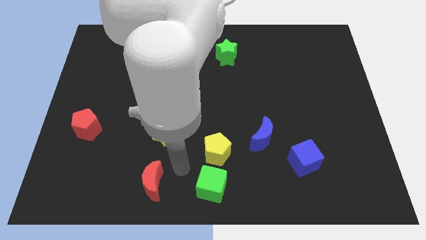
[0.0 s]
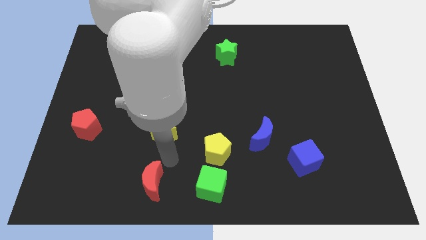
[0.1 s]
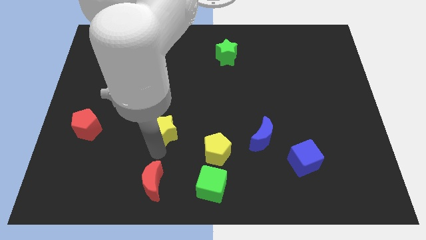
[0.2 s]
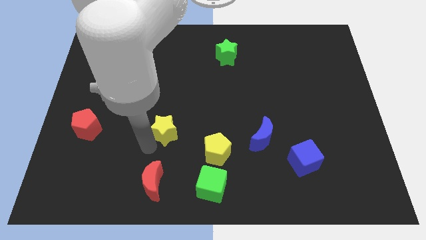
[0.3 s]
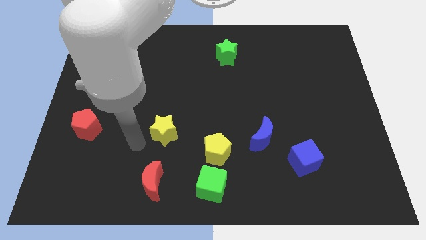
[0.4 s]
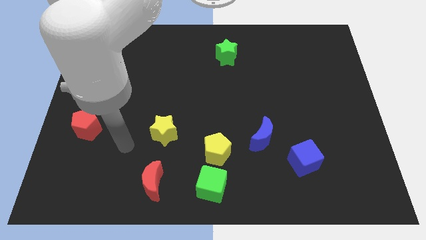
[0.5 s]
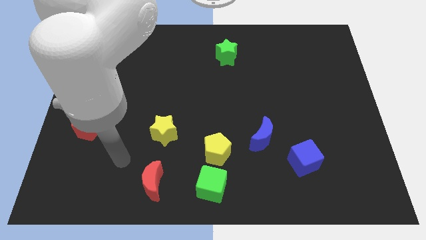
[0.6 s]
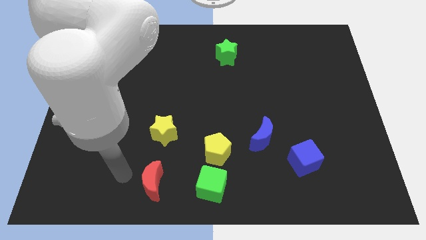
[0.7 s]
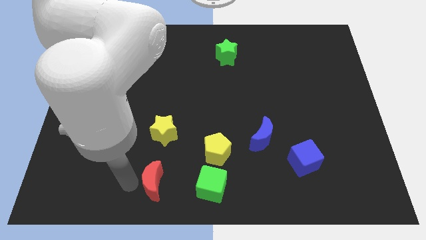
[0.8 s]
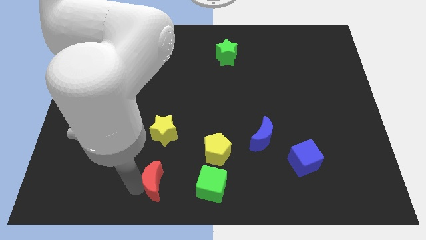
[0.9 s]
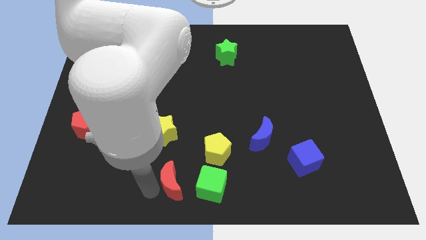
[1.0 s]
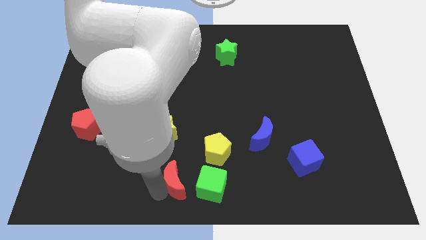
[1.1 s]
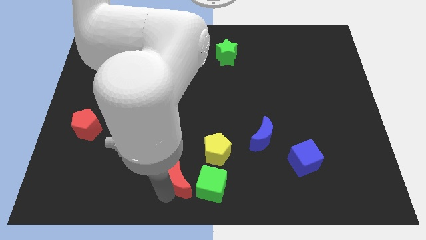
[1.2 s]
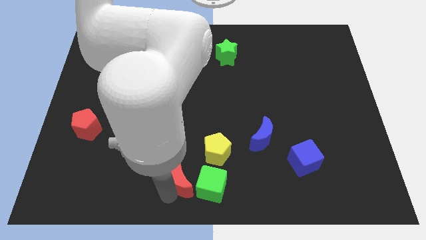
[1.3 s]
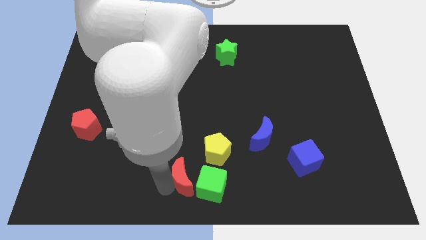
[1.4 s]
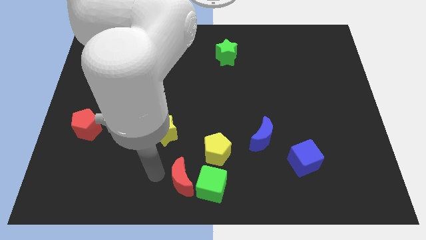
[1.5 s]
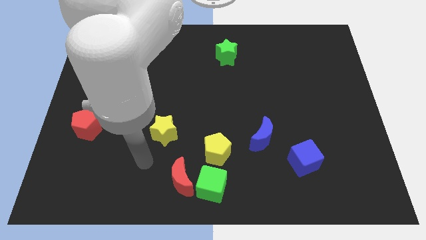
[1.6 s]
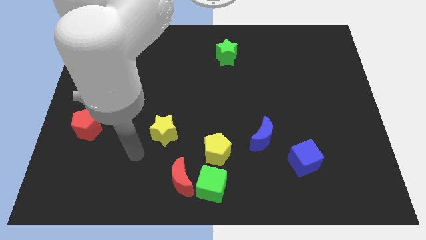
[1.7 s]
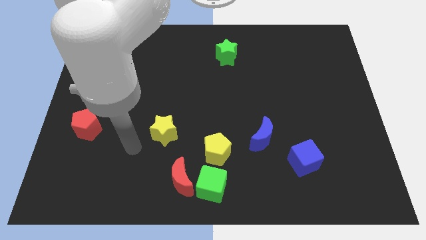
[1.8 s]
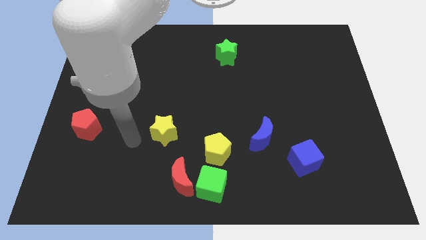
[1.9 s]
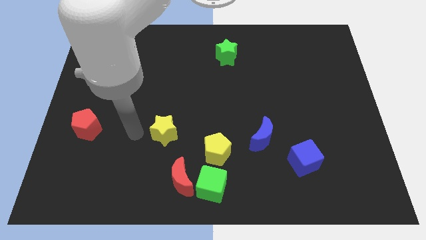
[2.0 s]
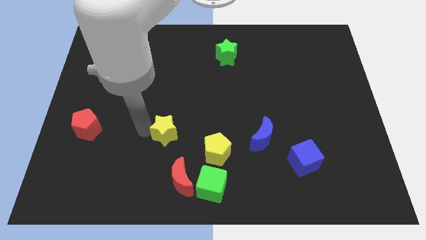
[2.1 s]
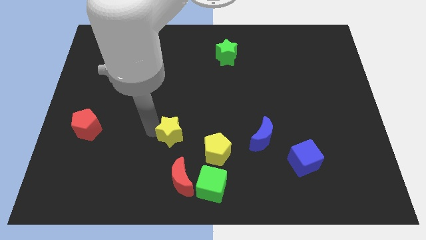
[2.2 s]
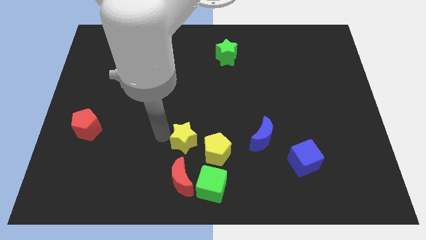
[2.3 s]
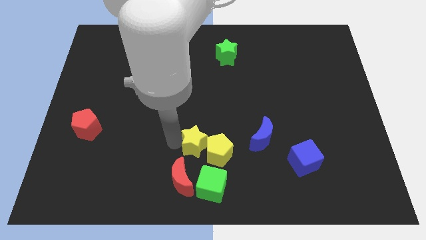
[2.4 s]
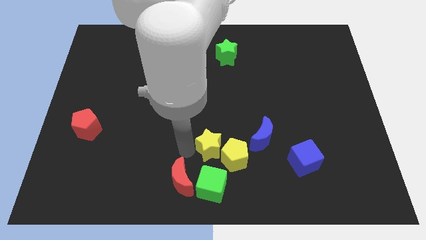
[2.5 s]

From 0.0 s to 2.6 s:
move red moon into green cube

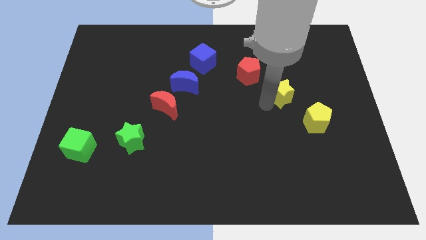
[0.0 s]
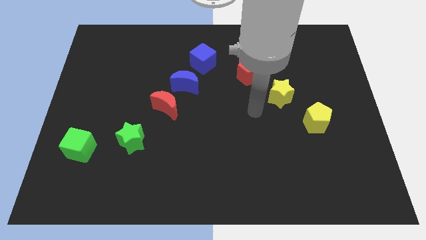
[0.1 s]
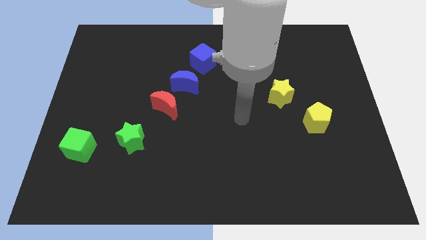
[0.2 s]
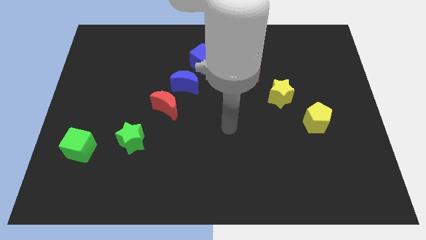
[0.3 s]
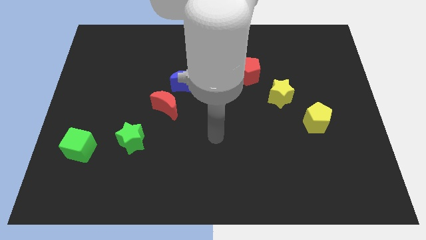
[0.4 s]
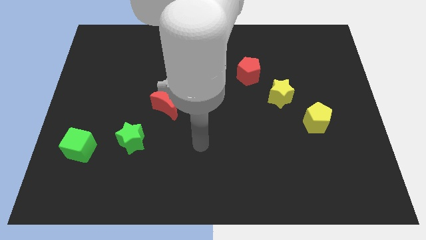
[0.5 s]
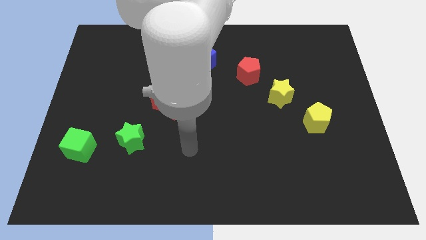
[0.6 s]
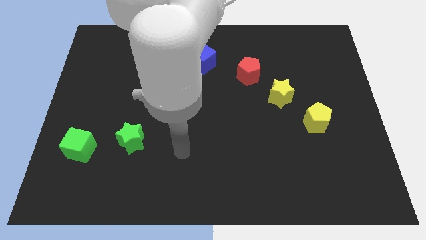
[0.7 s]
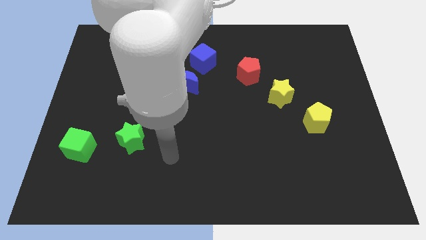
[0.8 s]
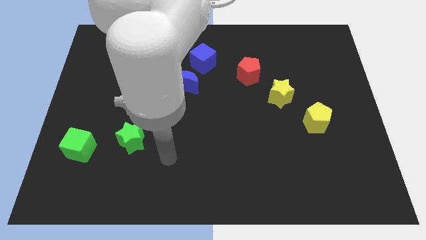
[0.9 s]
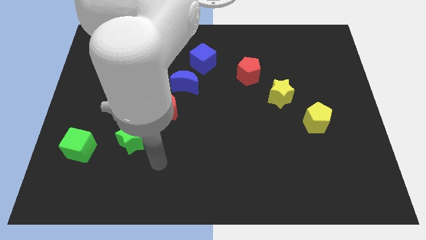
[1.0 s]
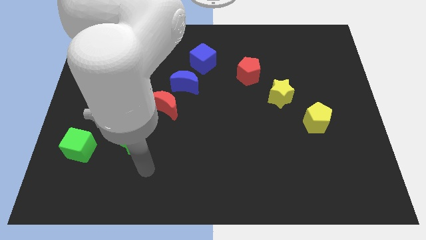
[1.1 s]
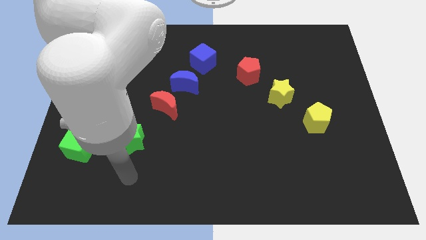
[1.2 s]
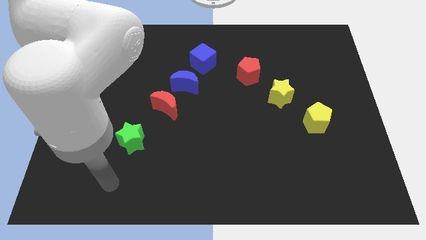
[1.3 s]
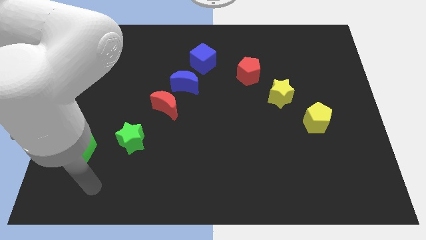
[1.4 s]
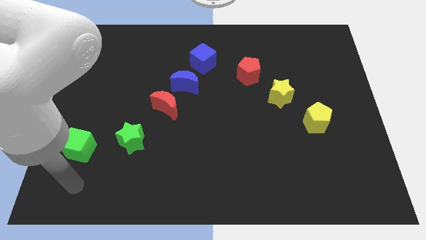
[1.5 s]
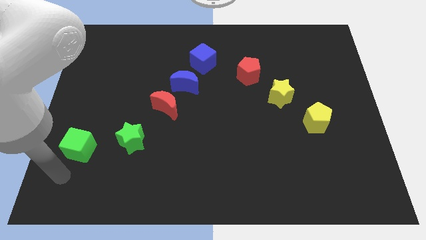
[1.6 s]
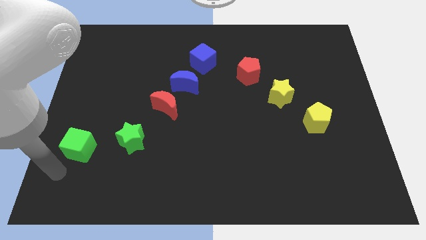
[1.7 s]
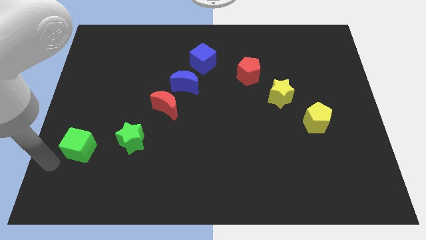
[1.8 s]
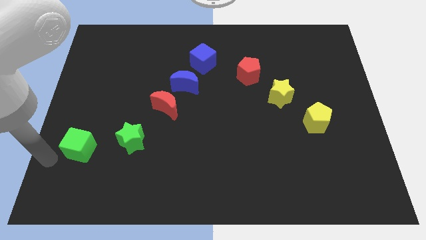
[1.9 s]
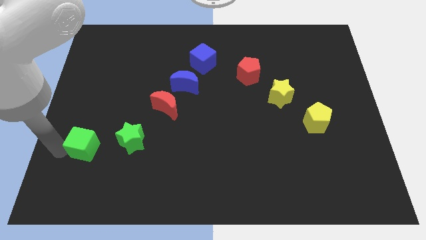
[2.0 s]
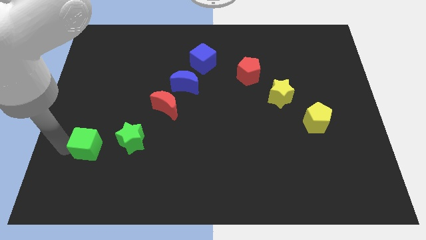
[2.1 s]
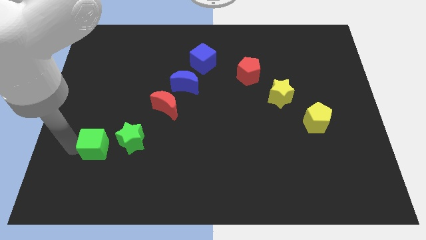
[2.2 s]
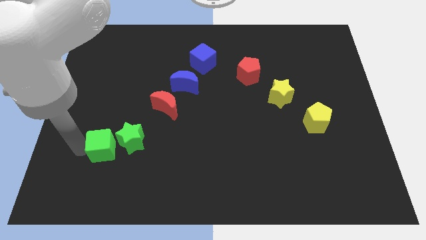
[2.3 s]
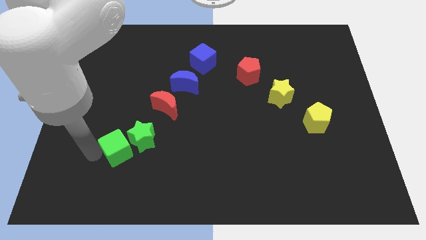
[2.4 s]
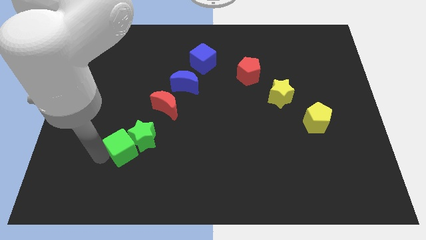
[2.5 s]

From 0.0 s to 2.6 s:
move the green cube into the green star

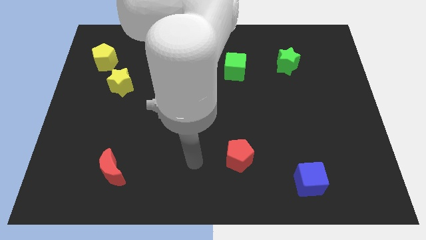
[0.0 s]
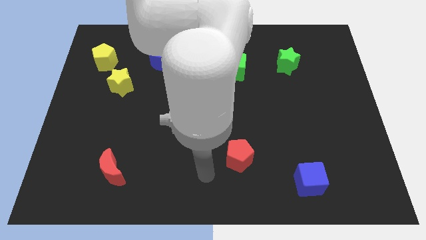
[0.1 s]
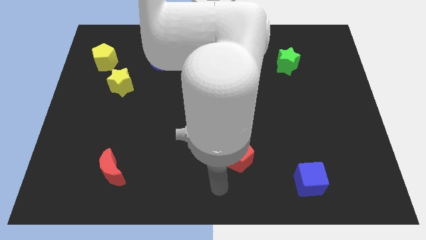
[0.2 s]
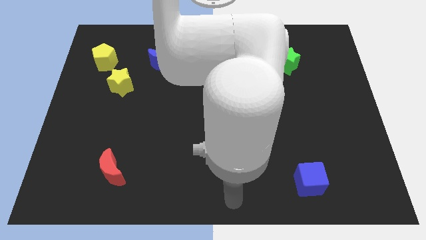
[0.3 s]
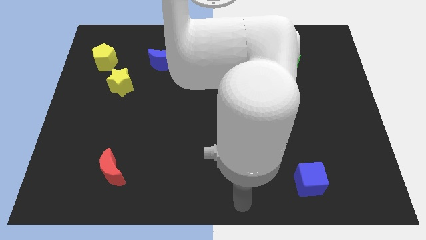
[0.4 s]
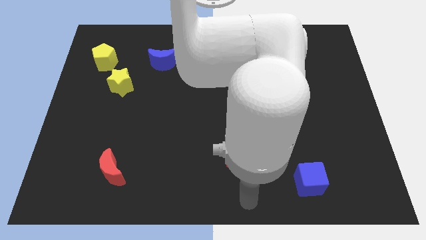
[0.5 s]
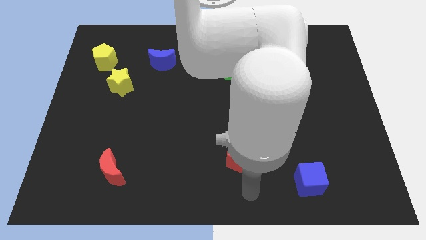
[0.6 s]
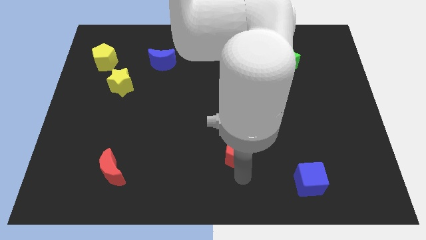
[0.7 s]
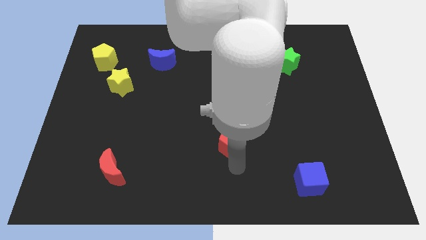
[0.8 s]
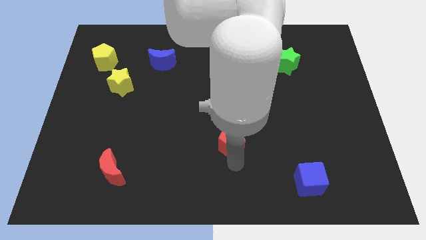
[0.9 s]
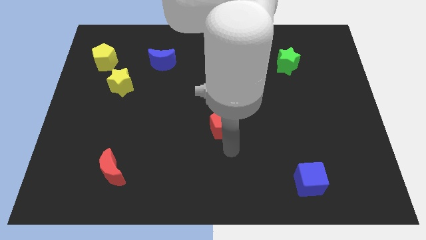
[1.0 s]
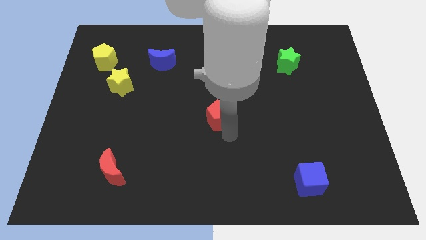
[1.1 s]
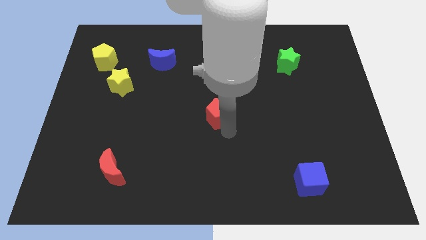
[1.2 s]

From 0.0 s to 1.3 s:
place the red pentagon at the center of the board

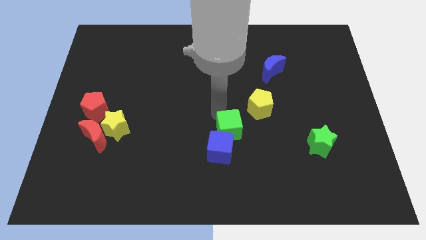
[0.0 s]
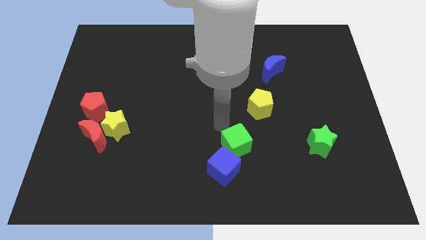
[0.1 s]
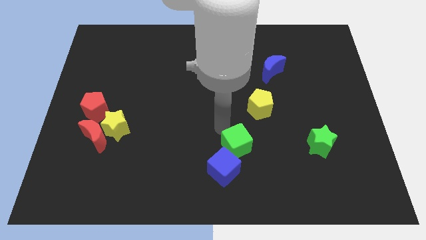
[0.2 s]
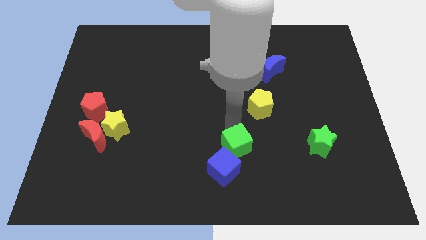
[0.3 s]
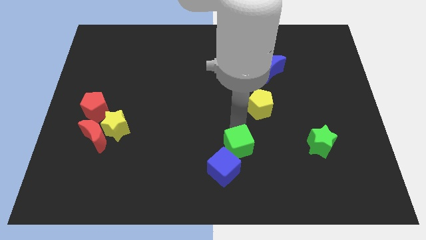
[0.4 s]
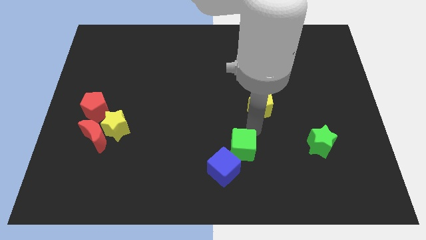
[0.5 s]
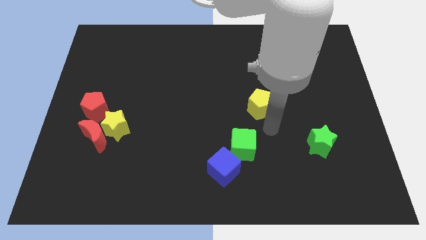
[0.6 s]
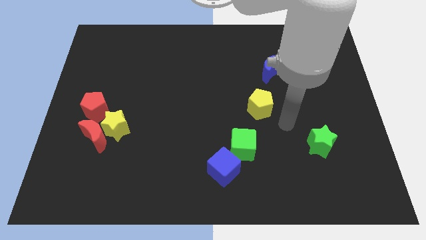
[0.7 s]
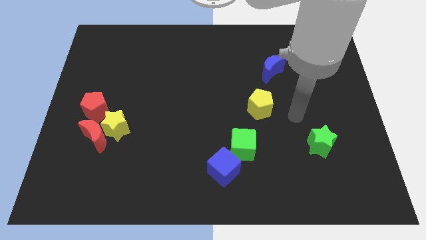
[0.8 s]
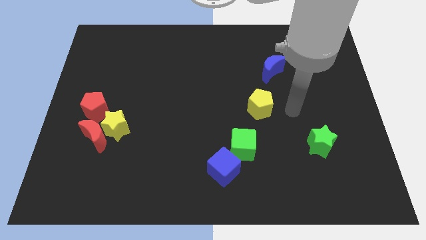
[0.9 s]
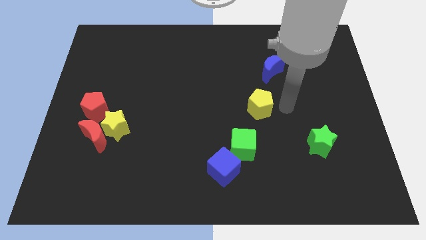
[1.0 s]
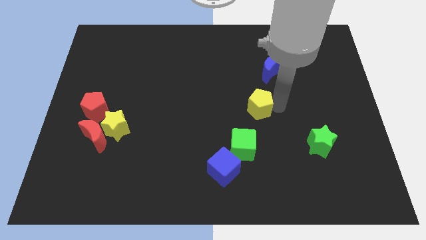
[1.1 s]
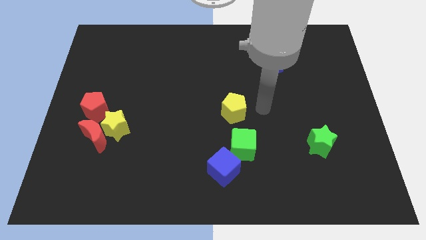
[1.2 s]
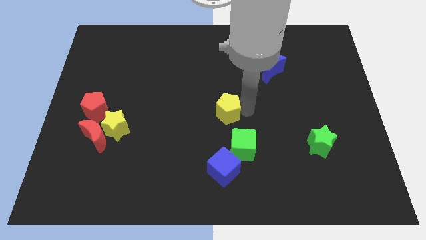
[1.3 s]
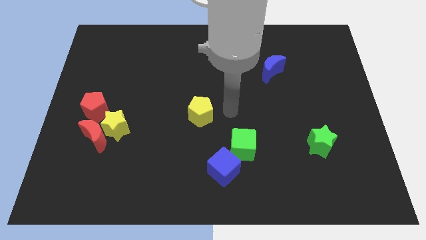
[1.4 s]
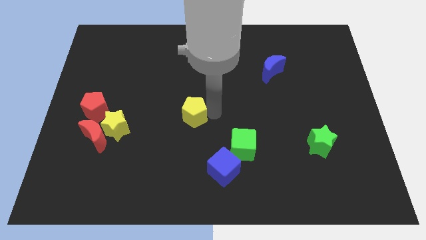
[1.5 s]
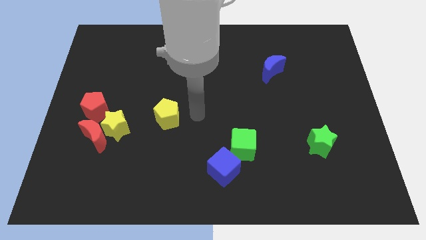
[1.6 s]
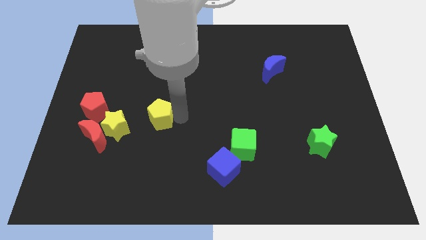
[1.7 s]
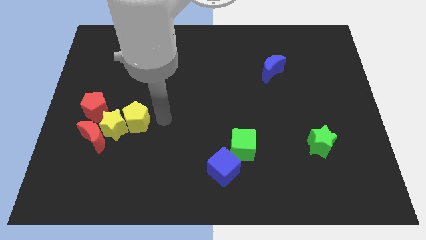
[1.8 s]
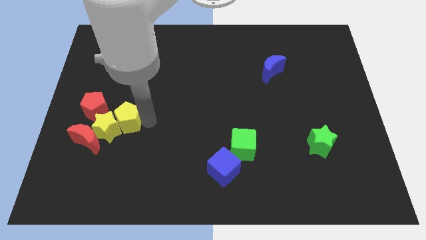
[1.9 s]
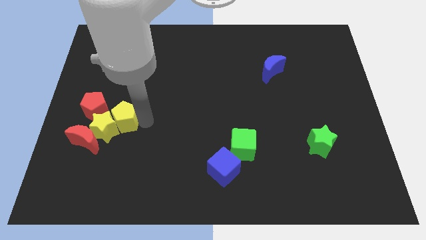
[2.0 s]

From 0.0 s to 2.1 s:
place the yellow pentagon towards the right side of the yellow star

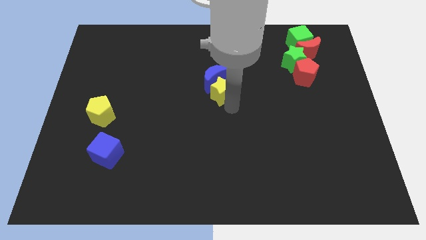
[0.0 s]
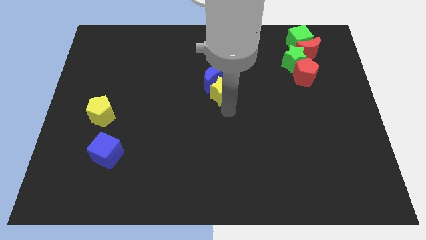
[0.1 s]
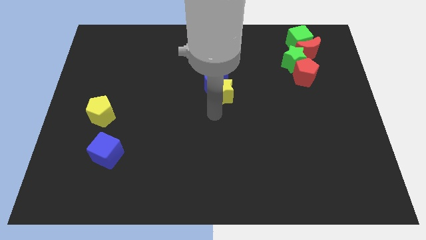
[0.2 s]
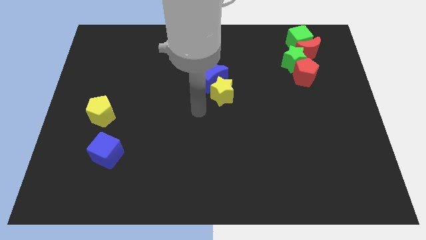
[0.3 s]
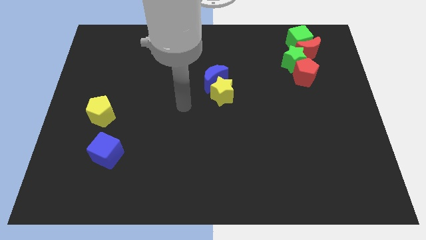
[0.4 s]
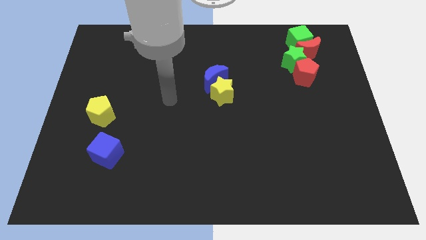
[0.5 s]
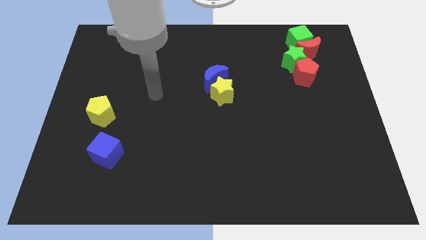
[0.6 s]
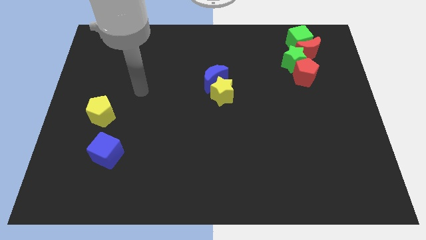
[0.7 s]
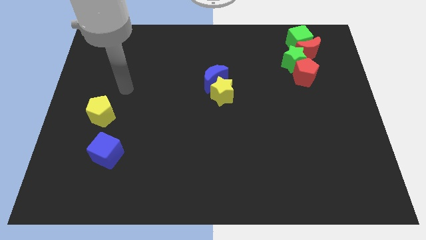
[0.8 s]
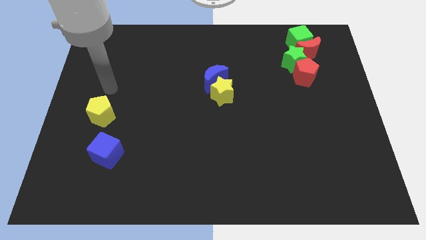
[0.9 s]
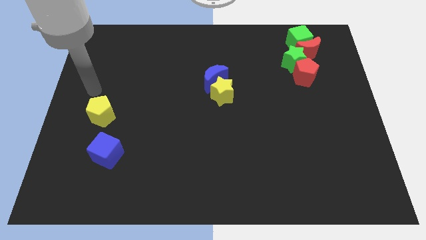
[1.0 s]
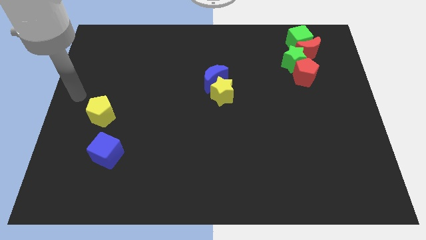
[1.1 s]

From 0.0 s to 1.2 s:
move yellow pentagon above the blue cube
